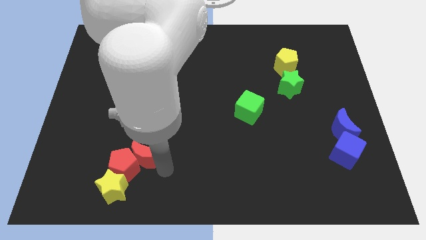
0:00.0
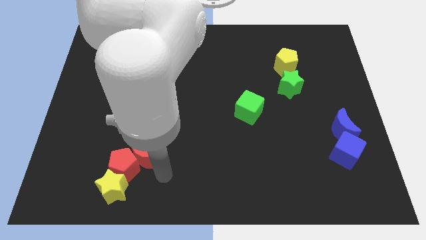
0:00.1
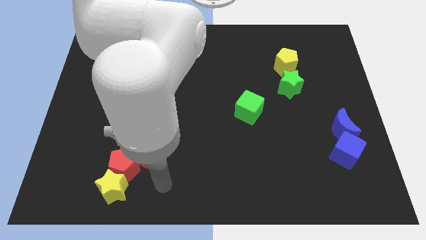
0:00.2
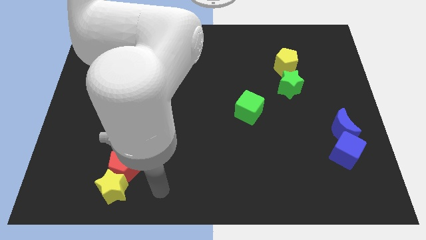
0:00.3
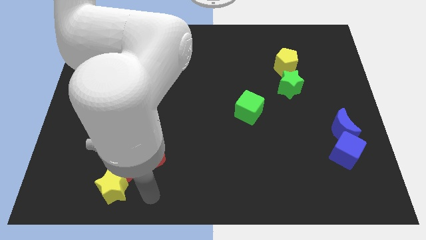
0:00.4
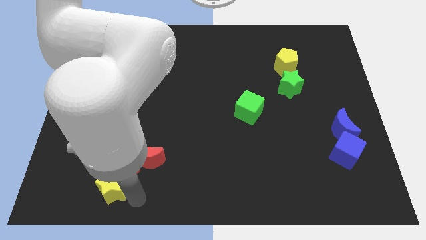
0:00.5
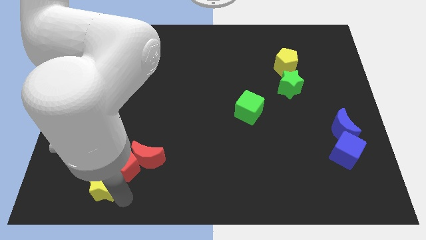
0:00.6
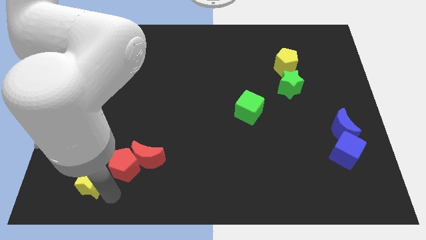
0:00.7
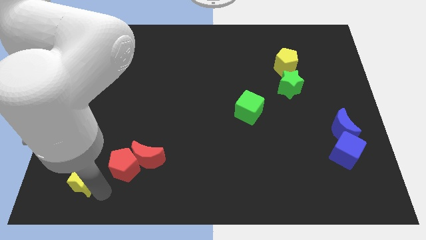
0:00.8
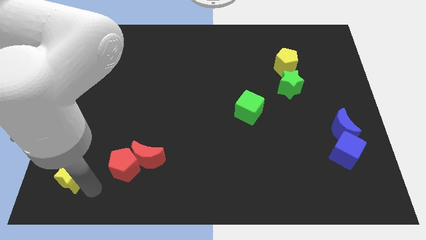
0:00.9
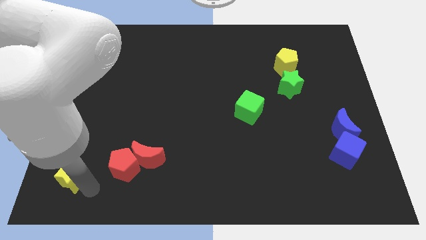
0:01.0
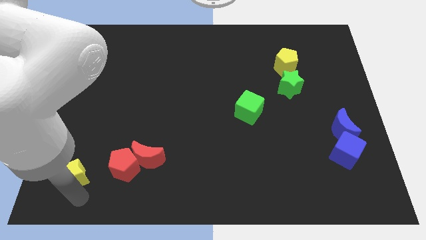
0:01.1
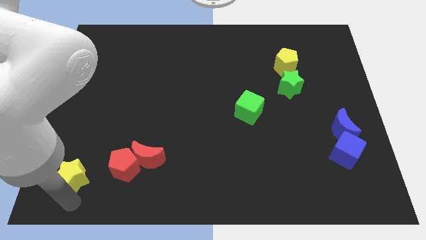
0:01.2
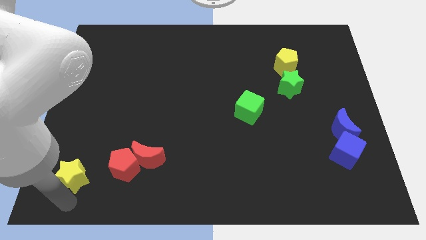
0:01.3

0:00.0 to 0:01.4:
move the yellow star towards the right

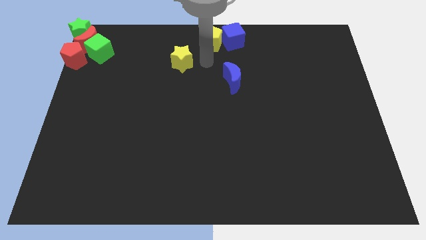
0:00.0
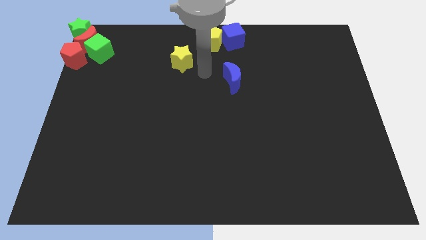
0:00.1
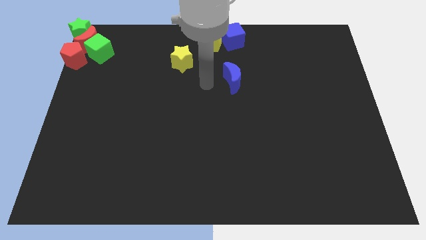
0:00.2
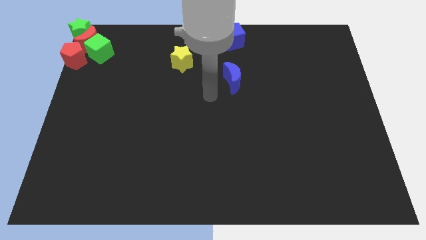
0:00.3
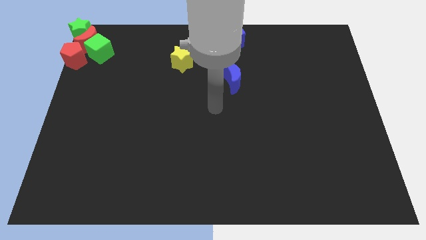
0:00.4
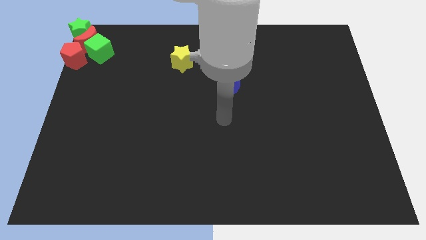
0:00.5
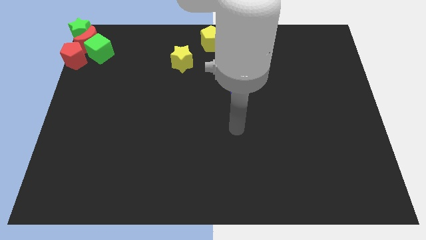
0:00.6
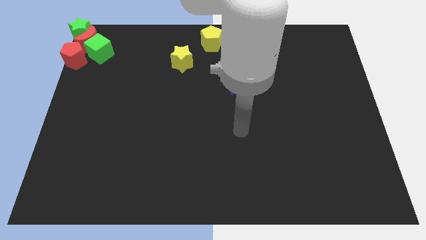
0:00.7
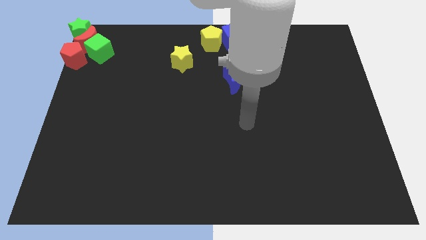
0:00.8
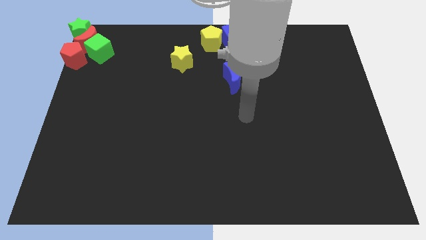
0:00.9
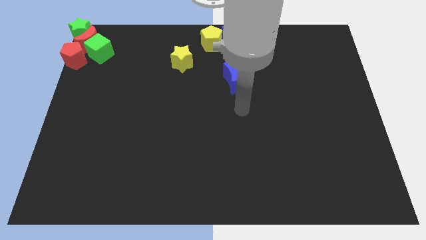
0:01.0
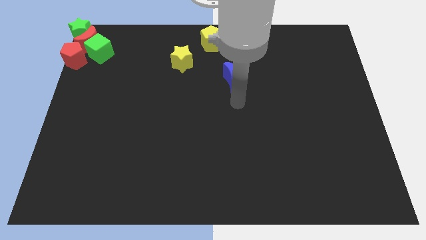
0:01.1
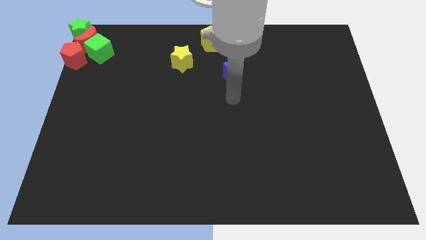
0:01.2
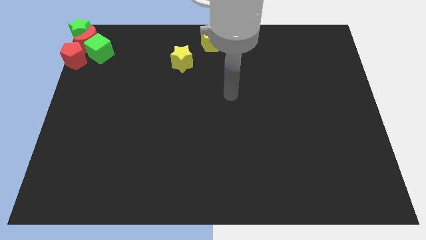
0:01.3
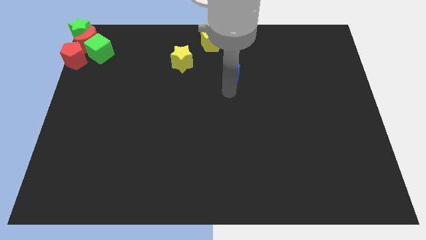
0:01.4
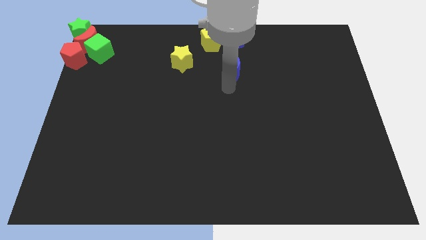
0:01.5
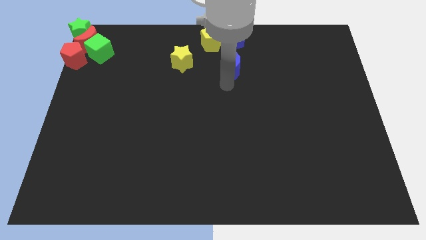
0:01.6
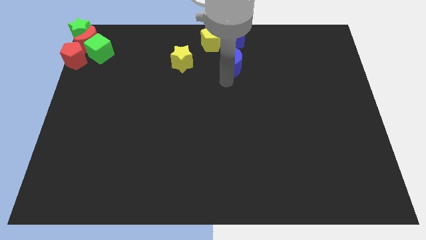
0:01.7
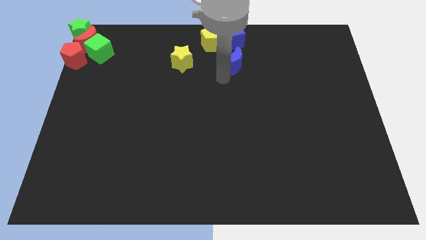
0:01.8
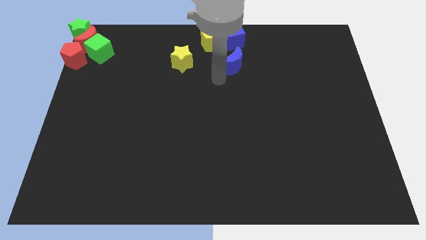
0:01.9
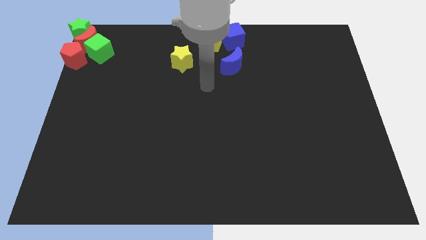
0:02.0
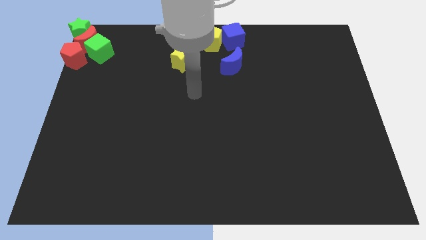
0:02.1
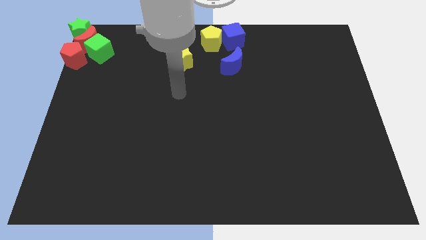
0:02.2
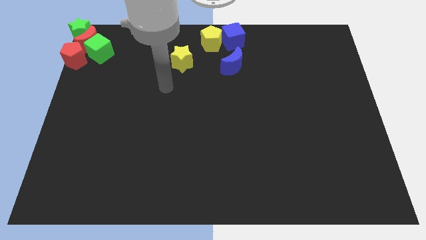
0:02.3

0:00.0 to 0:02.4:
move the blue crescent to the right of the yellow star

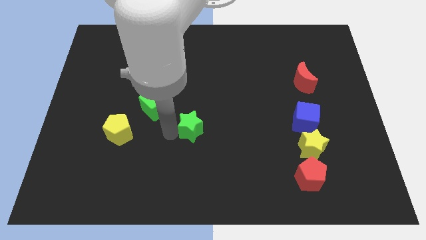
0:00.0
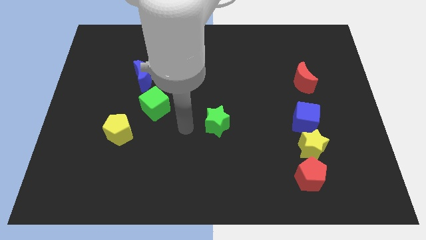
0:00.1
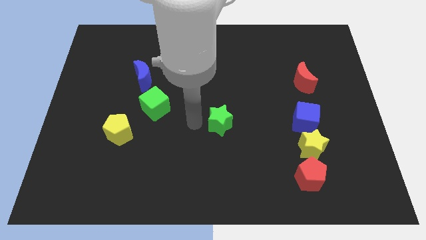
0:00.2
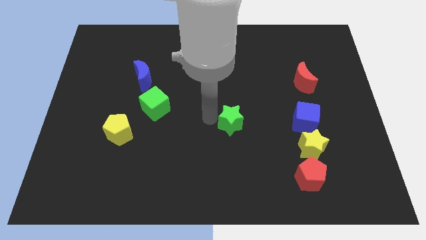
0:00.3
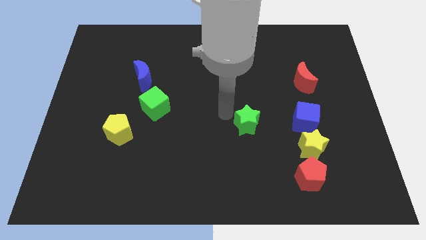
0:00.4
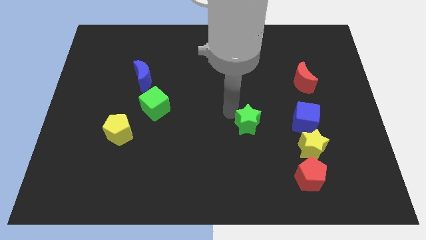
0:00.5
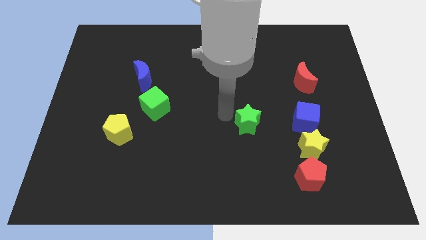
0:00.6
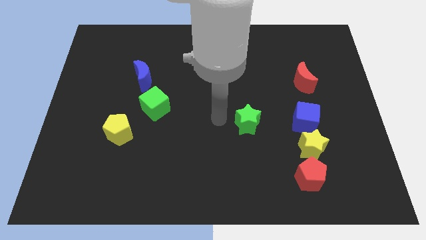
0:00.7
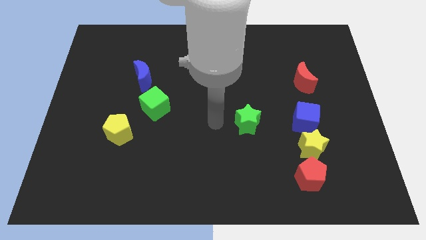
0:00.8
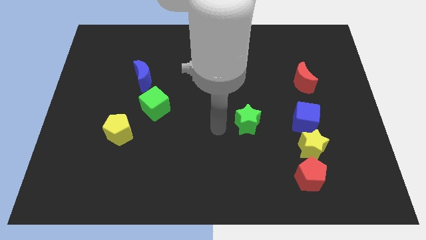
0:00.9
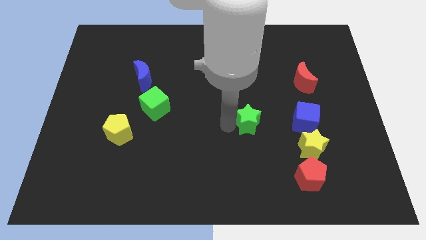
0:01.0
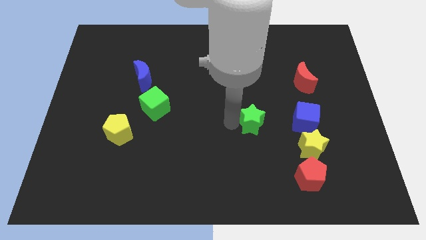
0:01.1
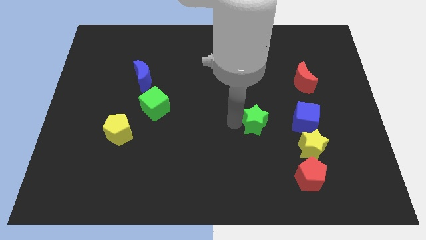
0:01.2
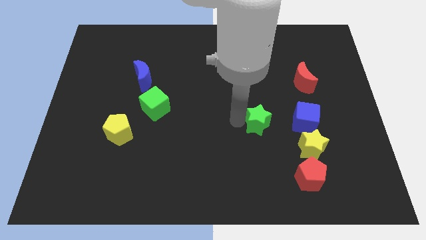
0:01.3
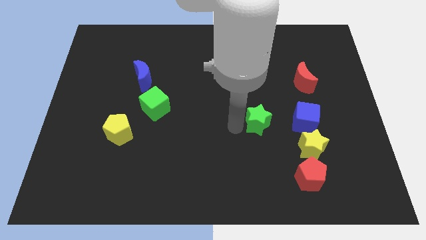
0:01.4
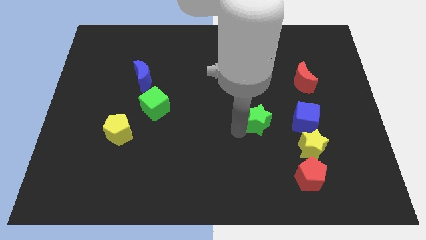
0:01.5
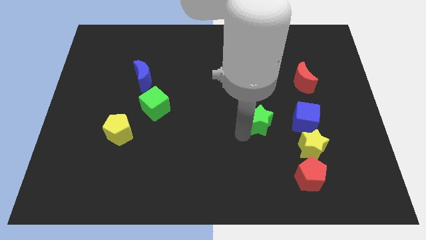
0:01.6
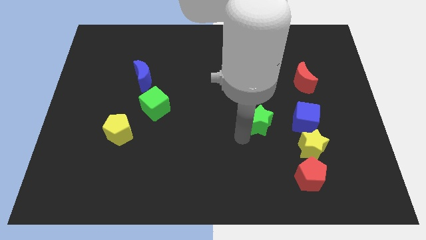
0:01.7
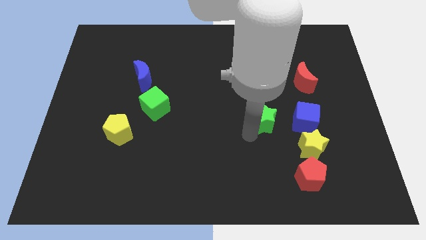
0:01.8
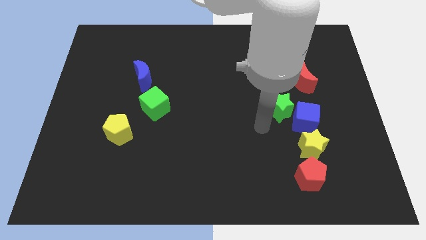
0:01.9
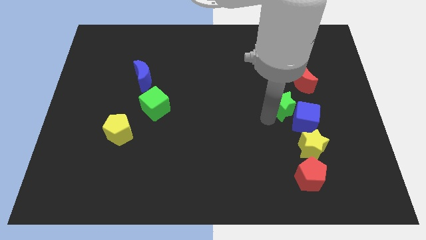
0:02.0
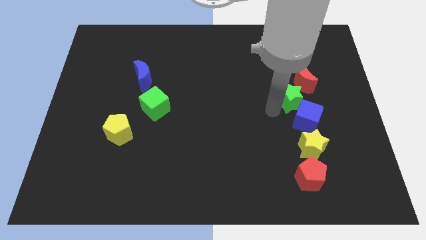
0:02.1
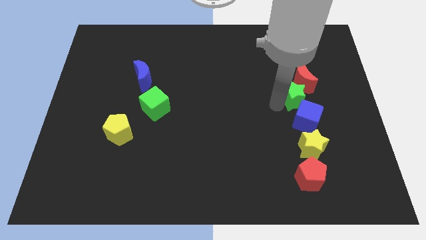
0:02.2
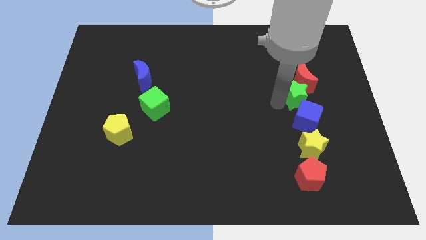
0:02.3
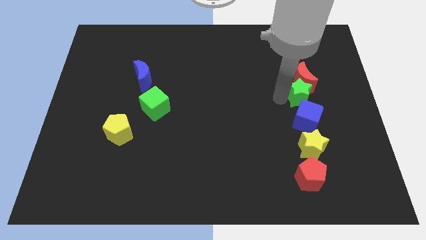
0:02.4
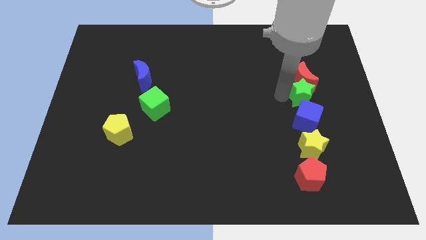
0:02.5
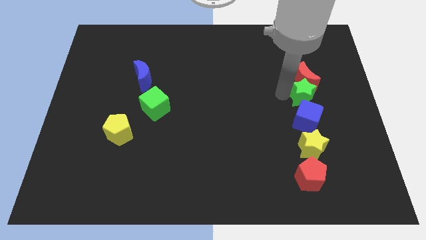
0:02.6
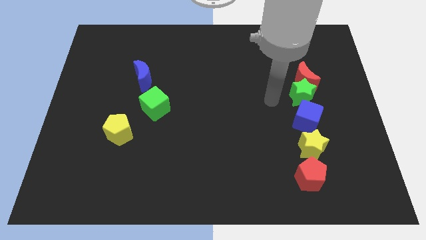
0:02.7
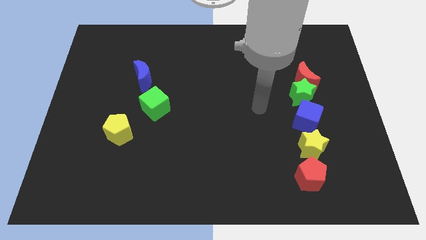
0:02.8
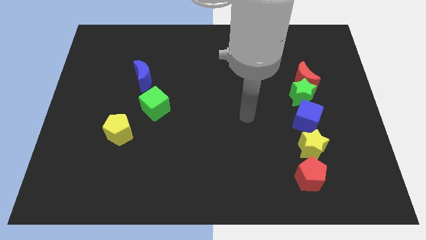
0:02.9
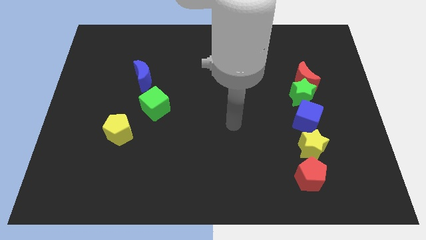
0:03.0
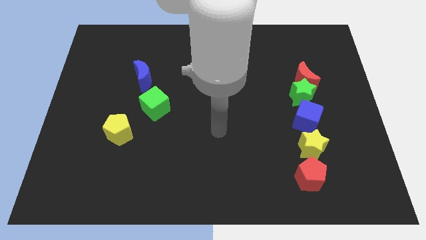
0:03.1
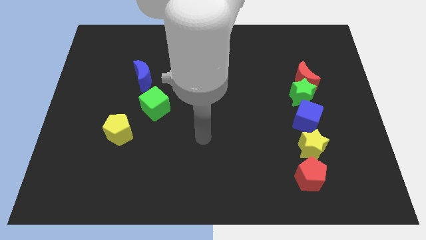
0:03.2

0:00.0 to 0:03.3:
place the green star in between the red moon and the green star

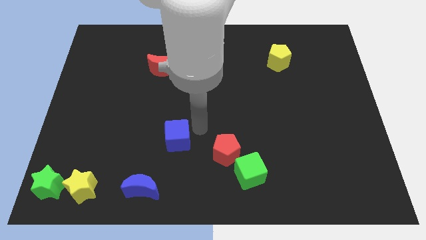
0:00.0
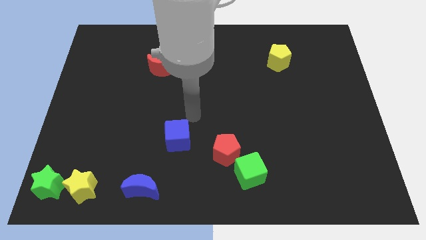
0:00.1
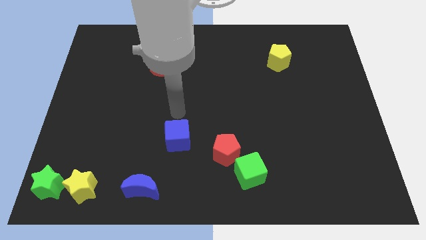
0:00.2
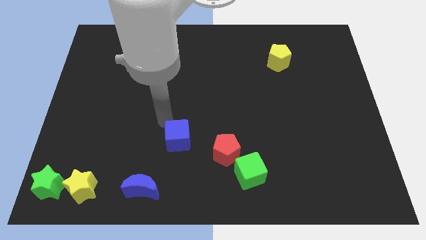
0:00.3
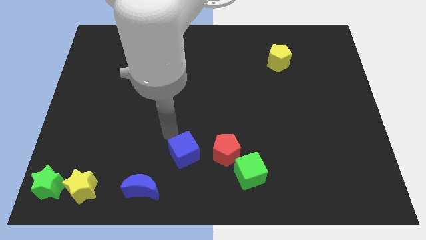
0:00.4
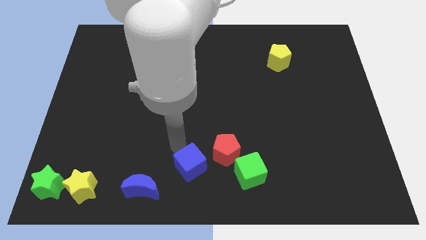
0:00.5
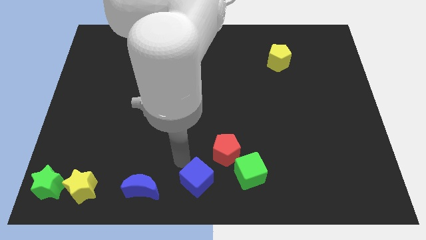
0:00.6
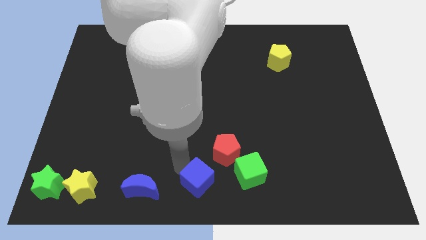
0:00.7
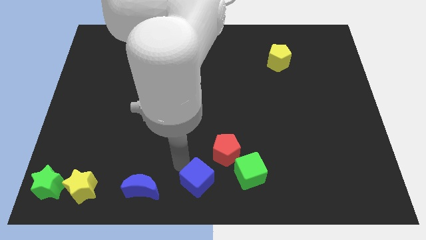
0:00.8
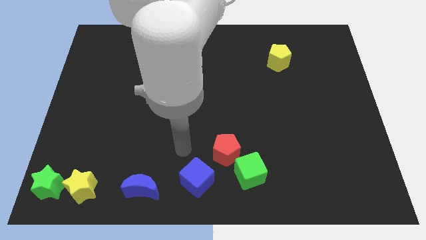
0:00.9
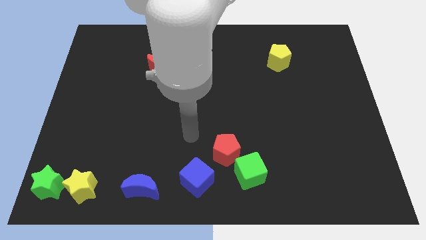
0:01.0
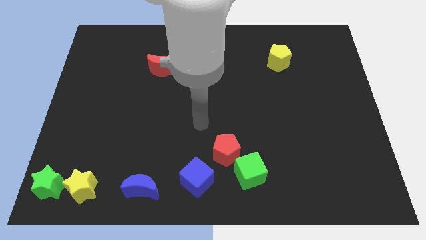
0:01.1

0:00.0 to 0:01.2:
place the blue cube to the right of the blue moon

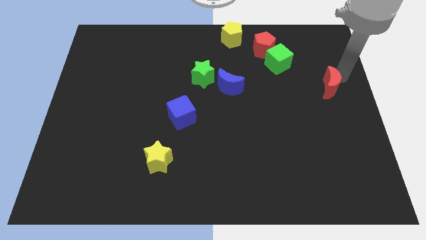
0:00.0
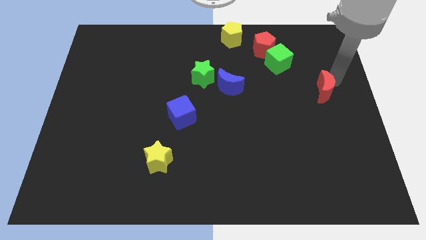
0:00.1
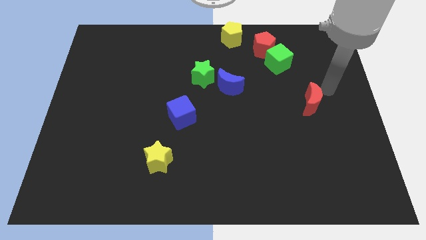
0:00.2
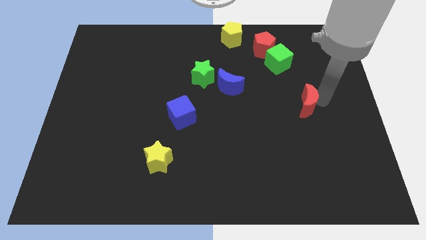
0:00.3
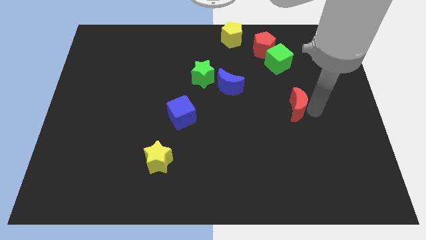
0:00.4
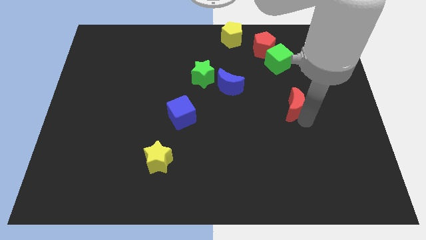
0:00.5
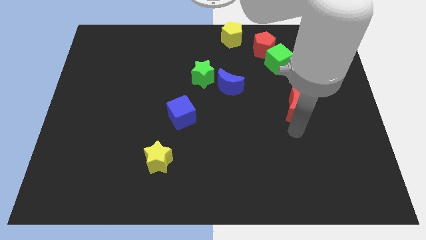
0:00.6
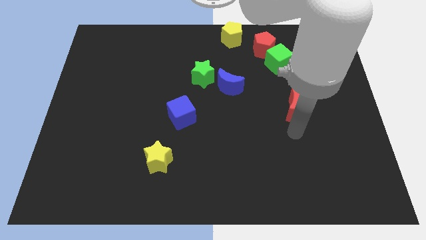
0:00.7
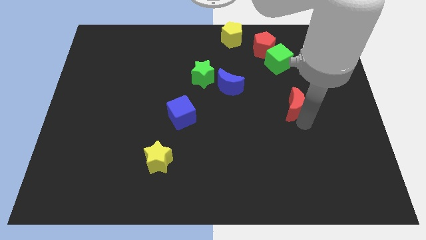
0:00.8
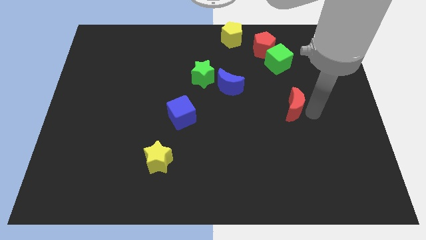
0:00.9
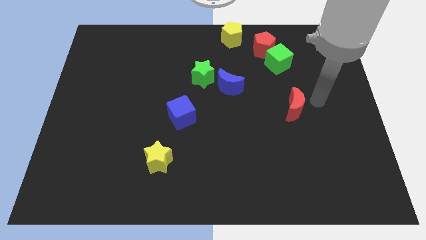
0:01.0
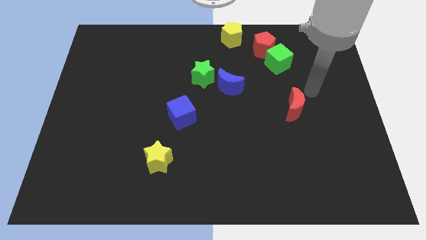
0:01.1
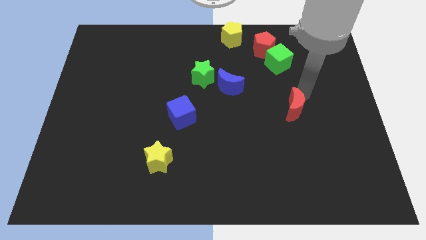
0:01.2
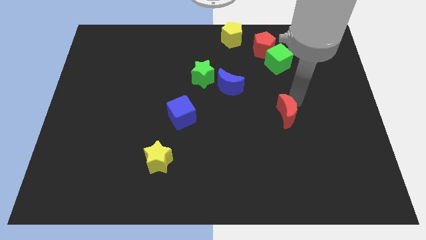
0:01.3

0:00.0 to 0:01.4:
place the red moon vertically below the green cube
